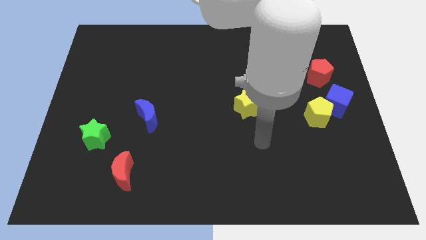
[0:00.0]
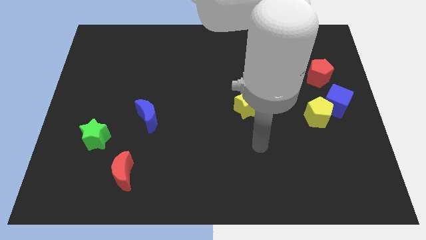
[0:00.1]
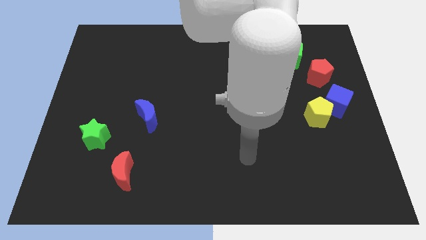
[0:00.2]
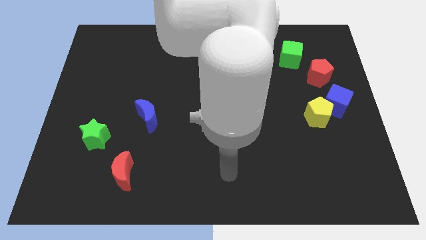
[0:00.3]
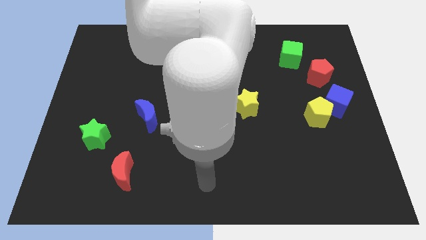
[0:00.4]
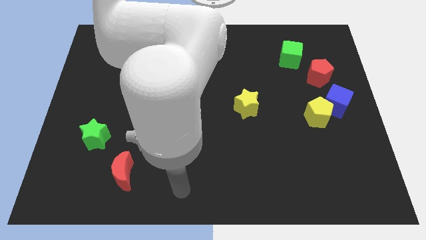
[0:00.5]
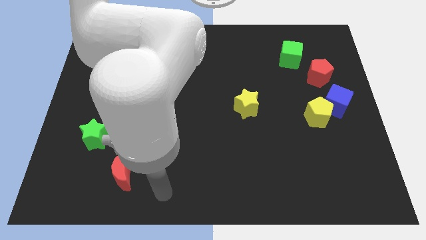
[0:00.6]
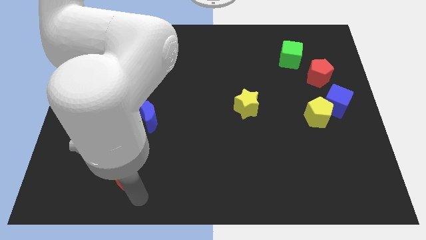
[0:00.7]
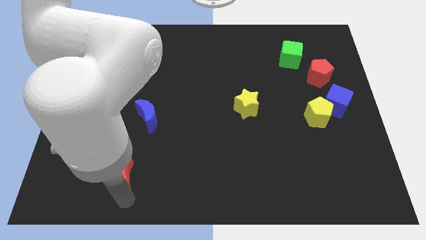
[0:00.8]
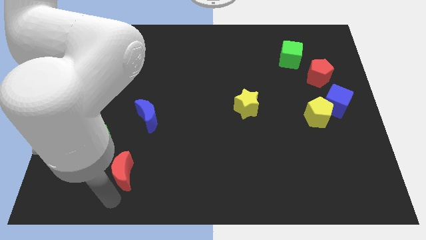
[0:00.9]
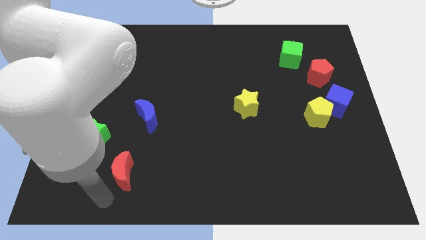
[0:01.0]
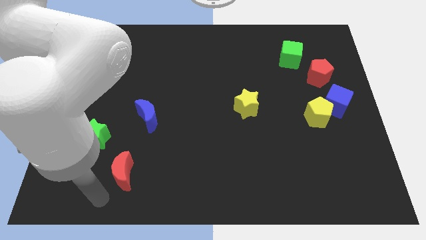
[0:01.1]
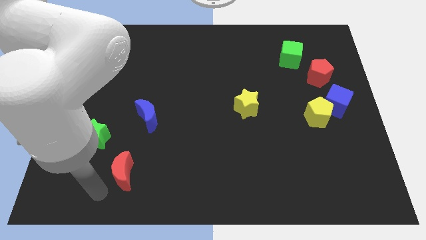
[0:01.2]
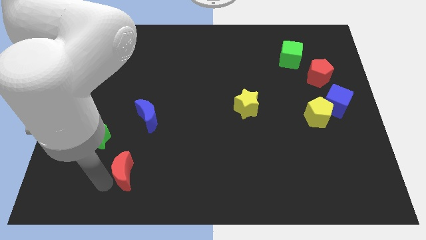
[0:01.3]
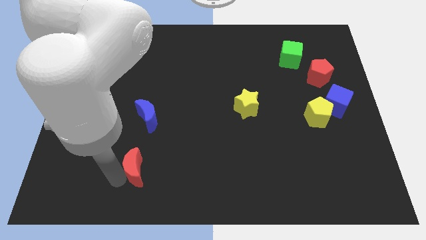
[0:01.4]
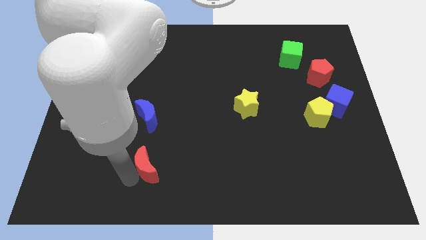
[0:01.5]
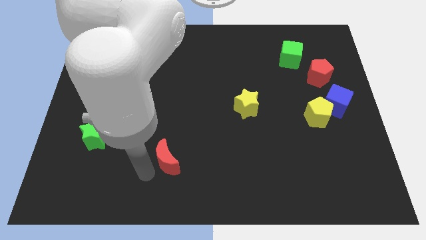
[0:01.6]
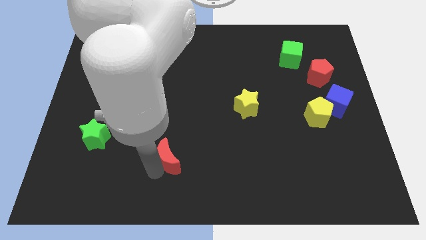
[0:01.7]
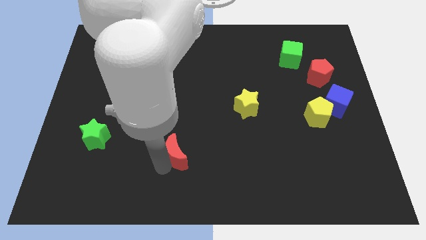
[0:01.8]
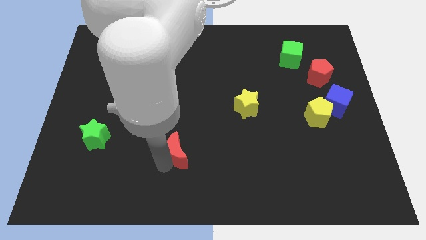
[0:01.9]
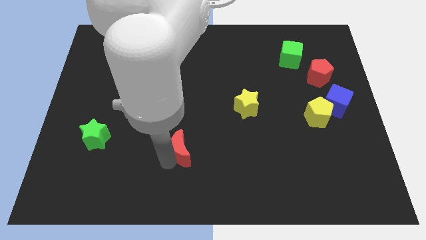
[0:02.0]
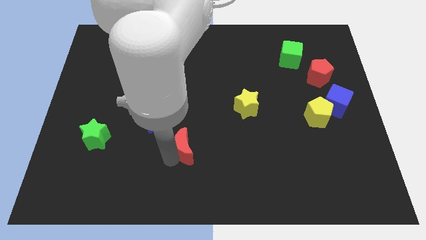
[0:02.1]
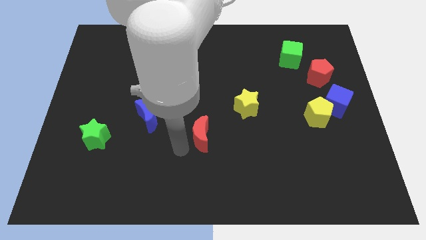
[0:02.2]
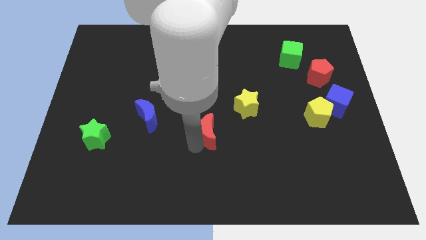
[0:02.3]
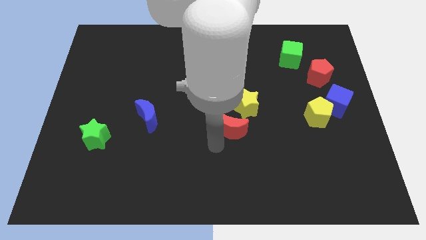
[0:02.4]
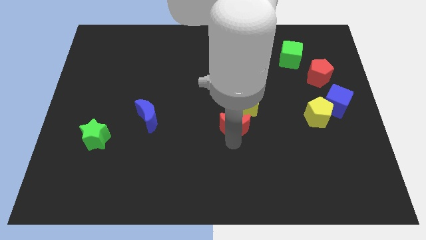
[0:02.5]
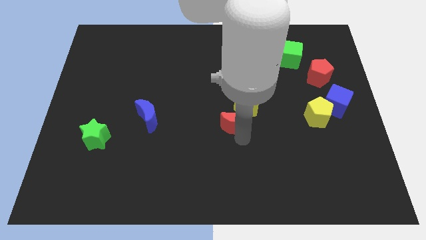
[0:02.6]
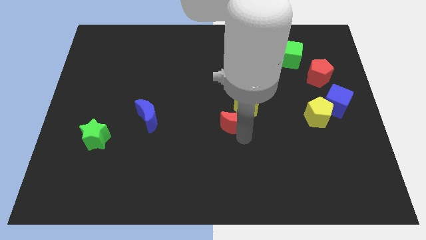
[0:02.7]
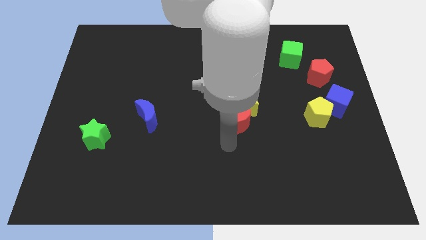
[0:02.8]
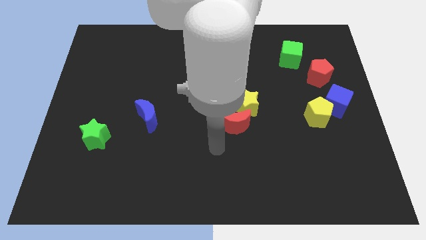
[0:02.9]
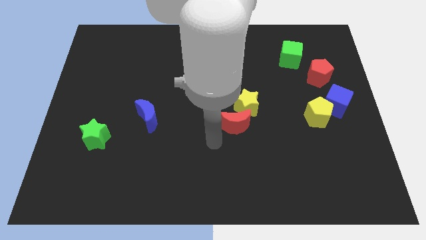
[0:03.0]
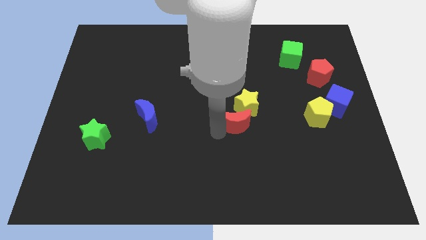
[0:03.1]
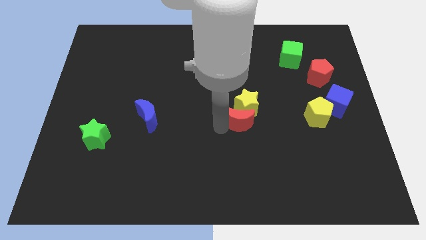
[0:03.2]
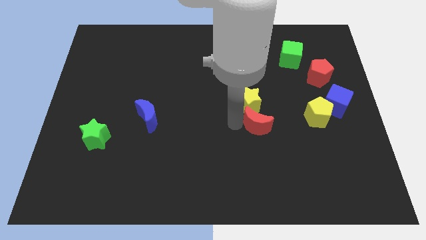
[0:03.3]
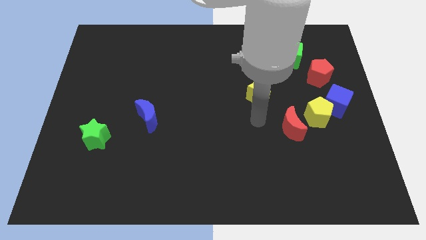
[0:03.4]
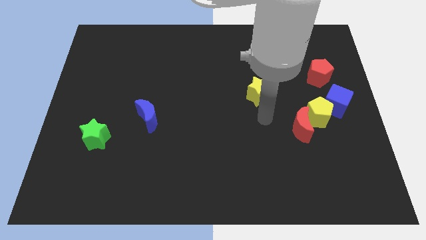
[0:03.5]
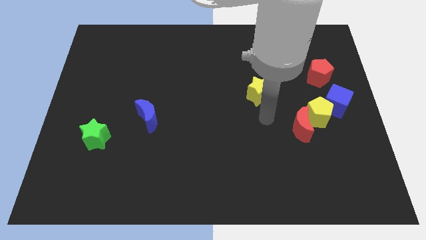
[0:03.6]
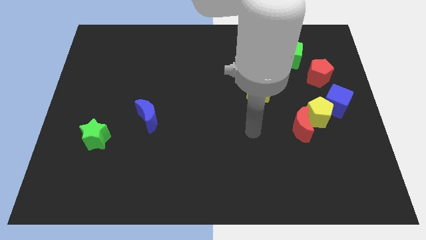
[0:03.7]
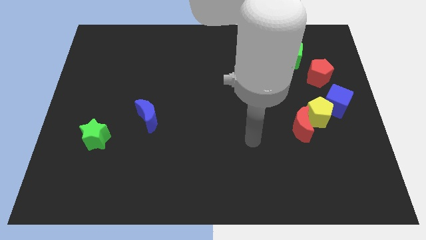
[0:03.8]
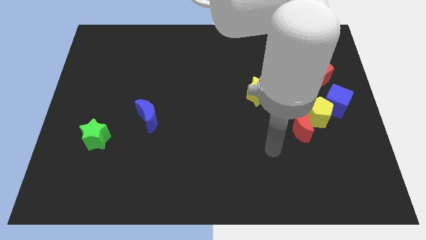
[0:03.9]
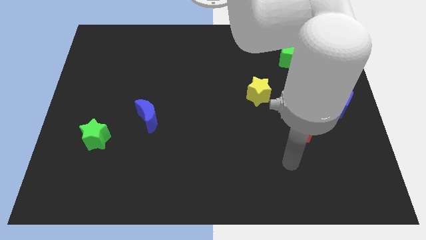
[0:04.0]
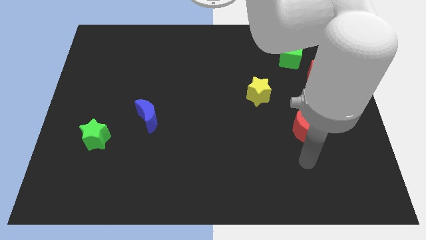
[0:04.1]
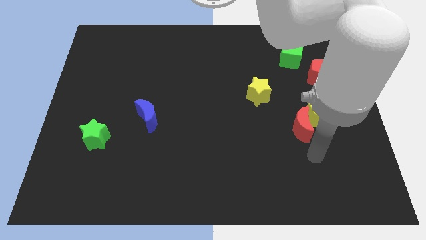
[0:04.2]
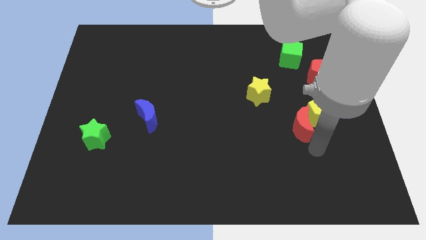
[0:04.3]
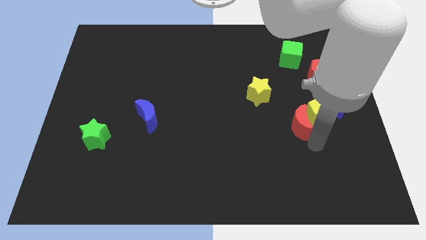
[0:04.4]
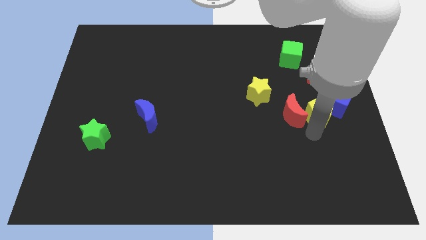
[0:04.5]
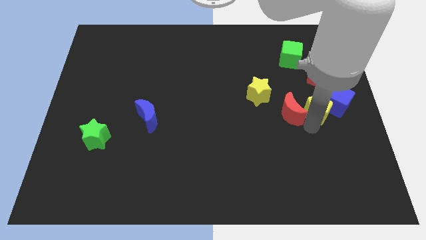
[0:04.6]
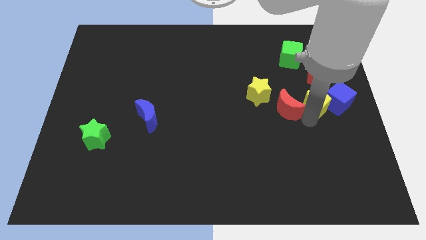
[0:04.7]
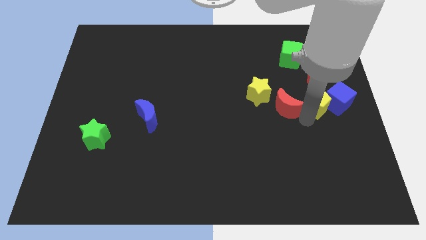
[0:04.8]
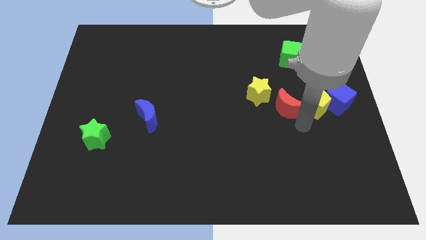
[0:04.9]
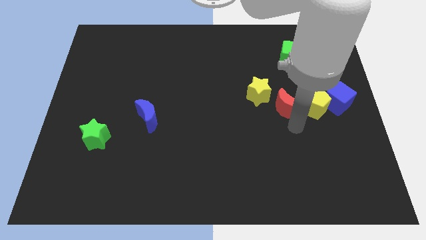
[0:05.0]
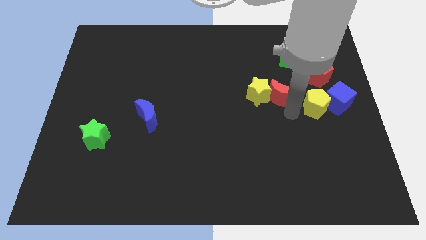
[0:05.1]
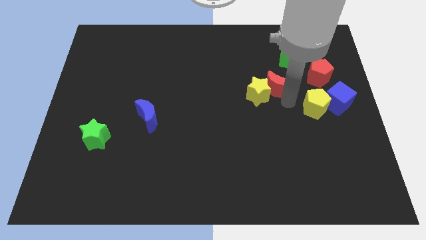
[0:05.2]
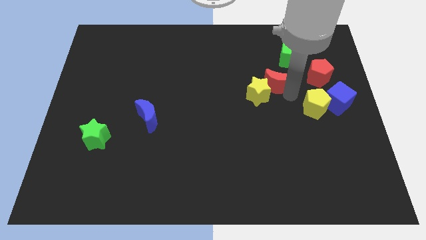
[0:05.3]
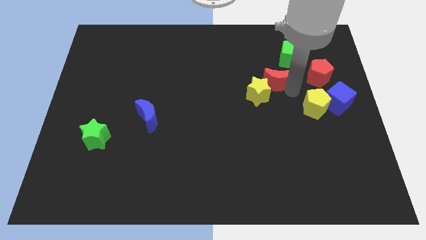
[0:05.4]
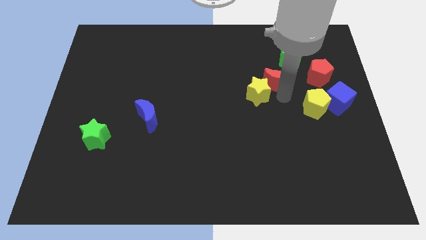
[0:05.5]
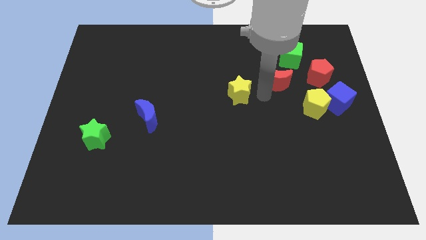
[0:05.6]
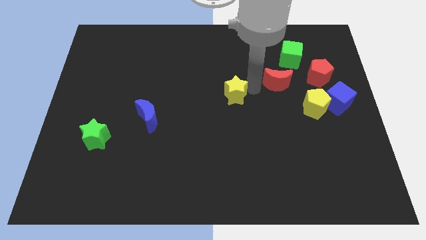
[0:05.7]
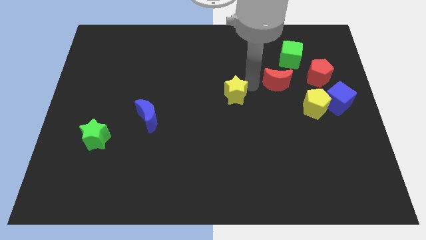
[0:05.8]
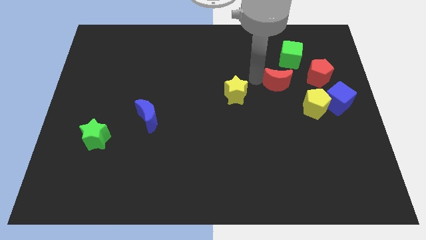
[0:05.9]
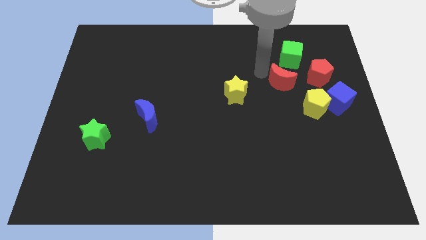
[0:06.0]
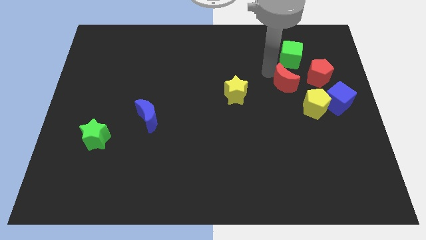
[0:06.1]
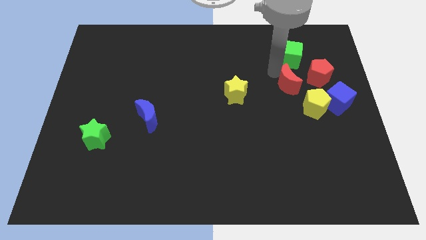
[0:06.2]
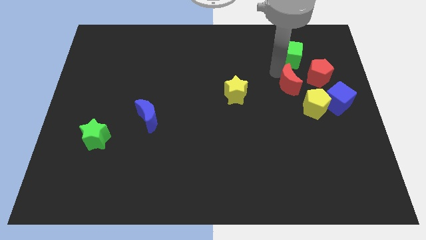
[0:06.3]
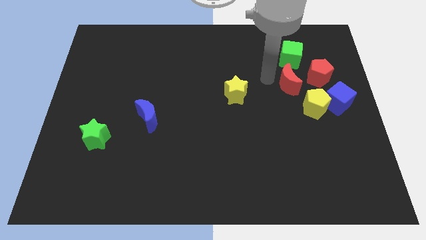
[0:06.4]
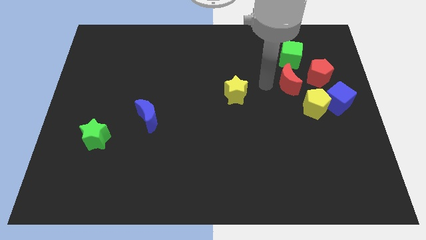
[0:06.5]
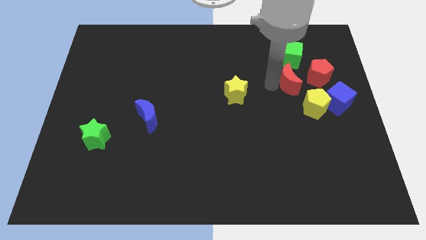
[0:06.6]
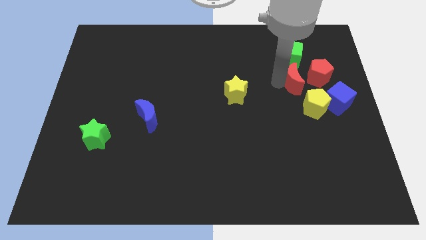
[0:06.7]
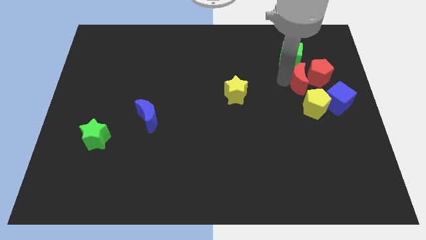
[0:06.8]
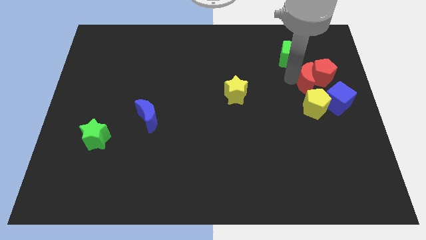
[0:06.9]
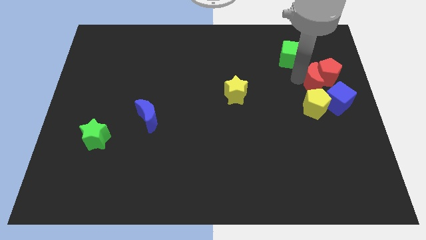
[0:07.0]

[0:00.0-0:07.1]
push the red moon close to the red pentagon

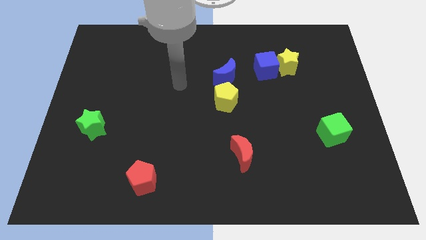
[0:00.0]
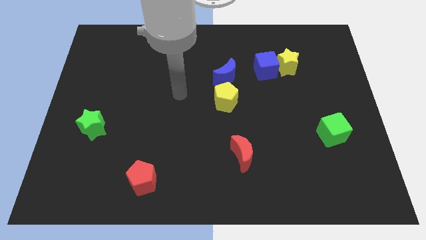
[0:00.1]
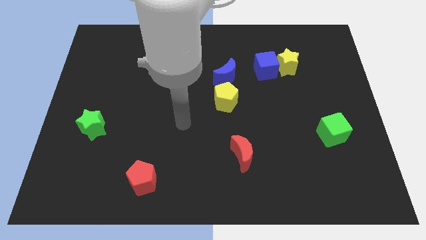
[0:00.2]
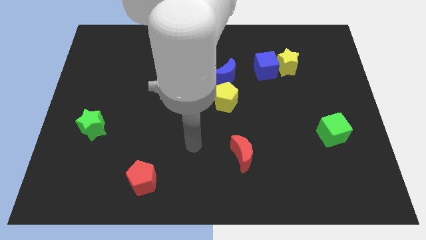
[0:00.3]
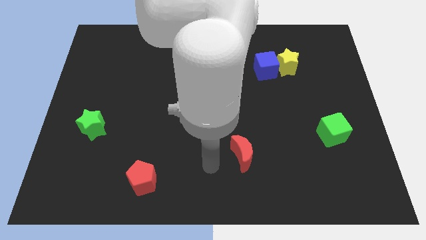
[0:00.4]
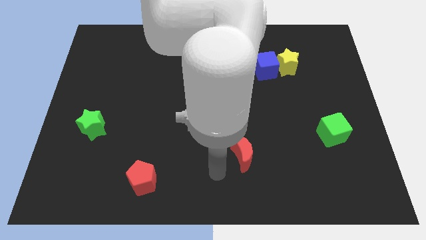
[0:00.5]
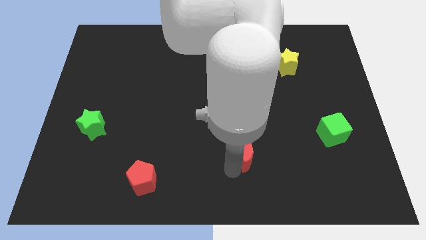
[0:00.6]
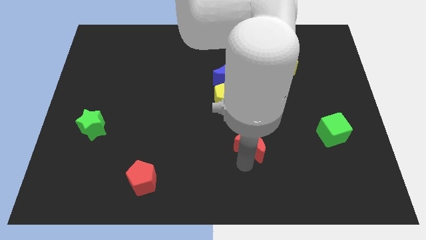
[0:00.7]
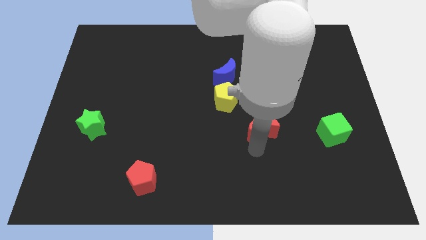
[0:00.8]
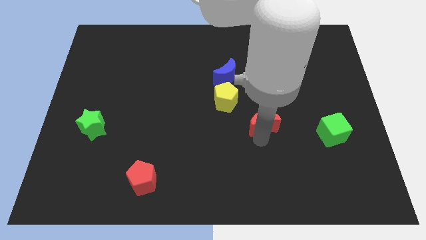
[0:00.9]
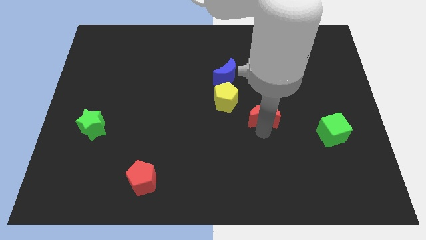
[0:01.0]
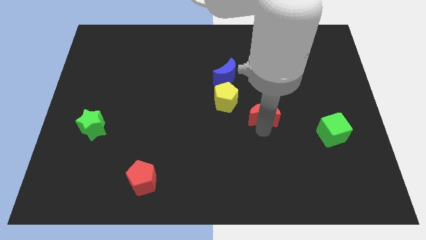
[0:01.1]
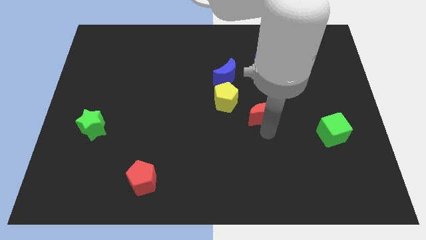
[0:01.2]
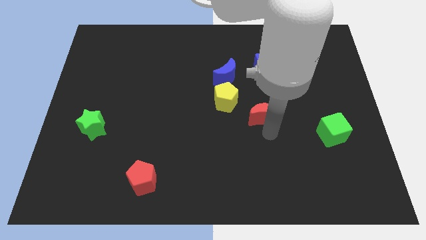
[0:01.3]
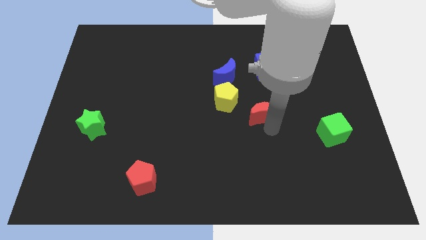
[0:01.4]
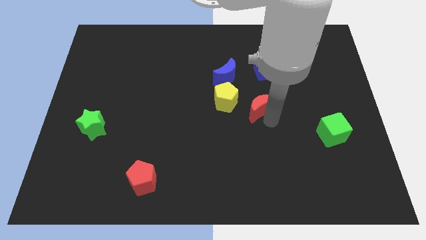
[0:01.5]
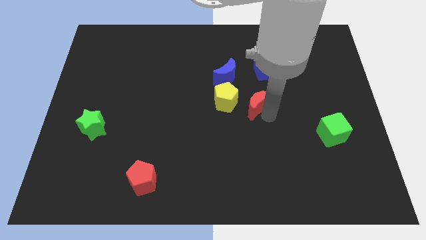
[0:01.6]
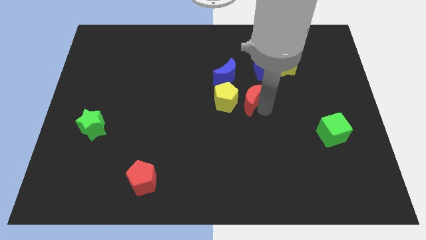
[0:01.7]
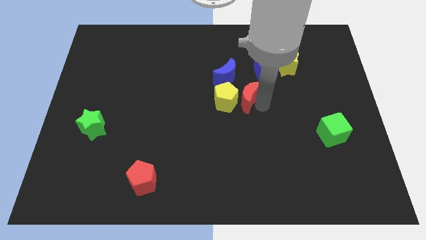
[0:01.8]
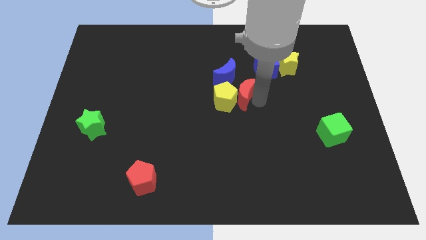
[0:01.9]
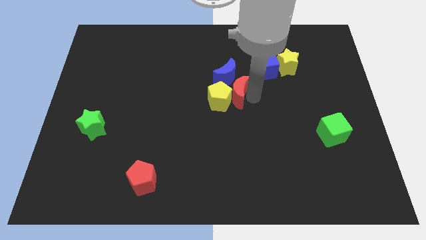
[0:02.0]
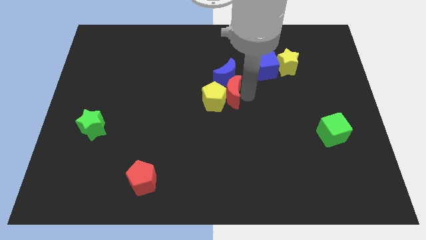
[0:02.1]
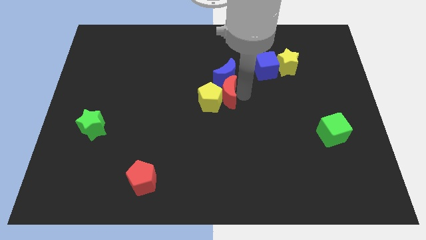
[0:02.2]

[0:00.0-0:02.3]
move the red moon towards the blue moon
